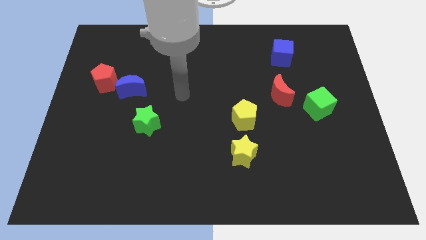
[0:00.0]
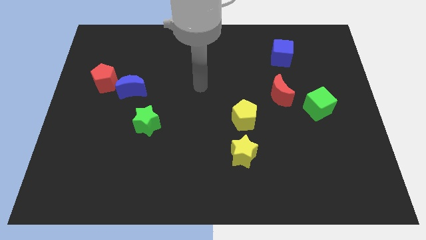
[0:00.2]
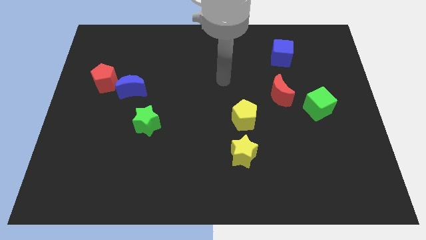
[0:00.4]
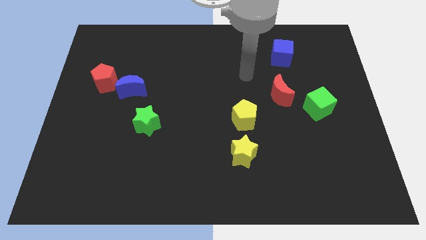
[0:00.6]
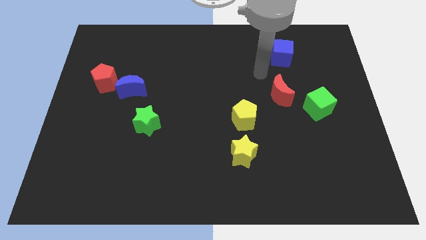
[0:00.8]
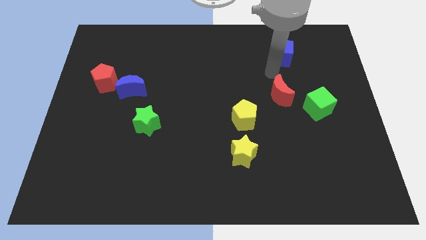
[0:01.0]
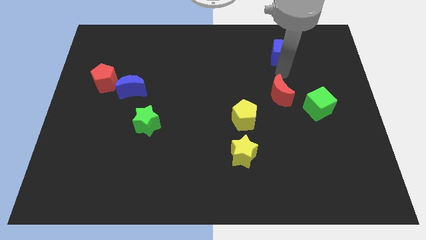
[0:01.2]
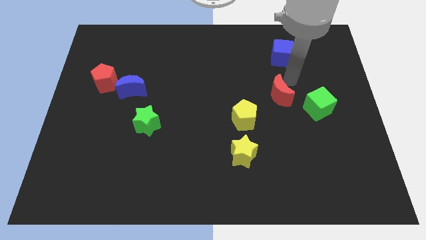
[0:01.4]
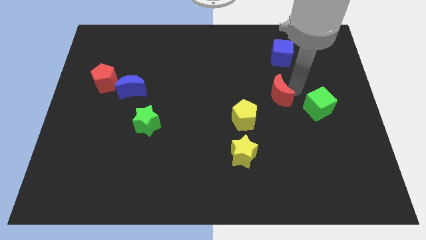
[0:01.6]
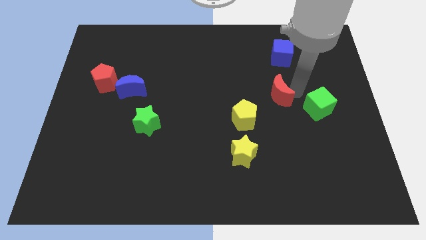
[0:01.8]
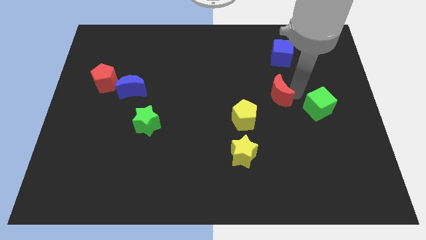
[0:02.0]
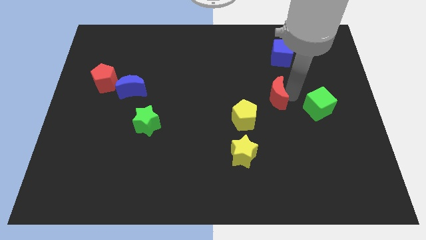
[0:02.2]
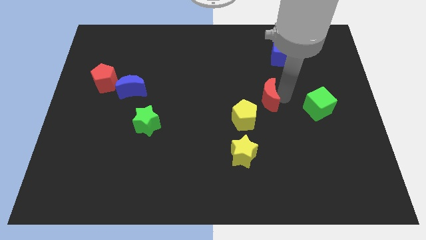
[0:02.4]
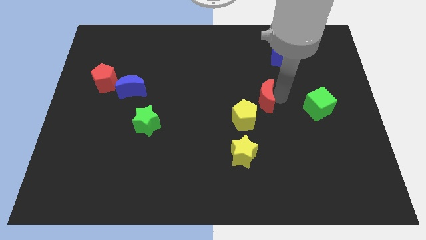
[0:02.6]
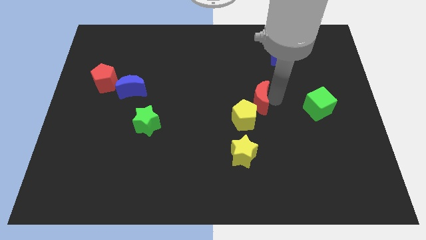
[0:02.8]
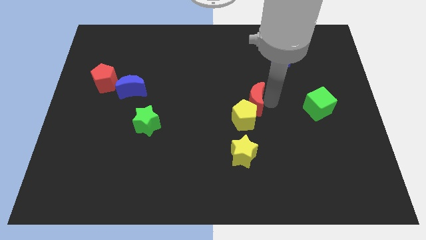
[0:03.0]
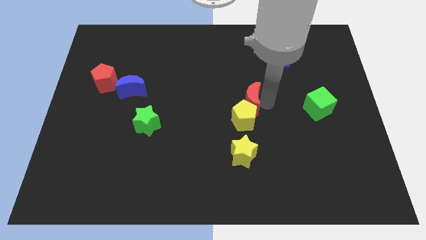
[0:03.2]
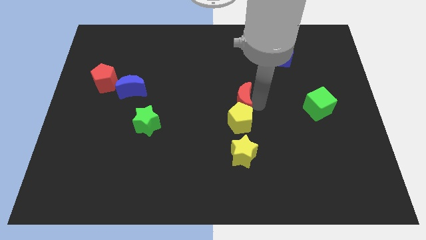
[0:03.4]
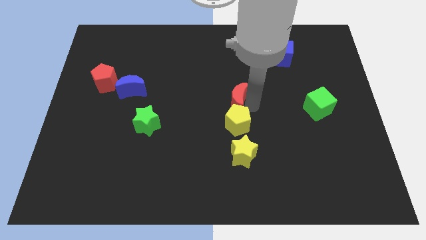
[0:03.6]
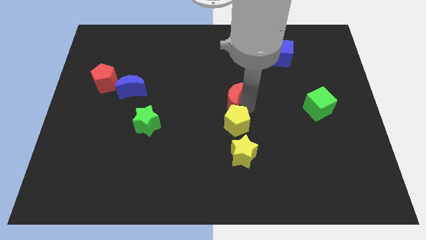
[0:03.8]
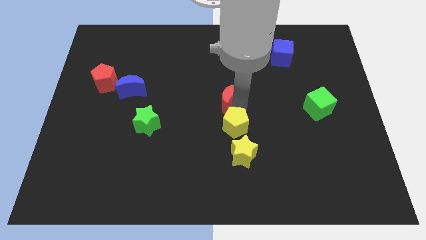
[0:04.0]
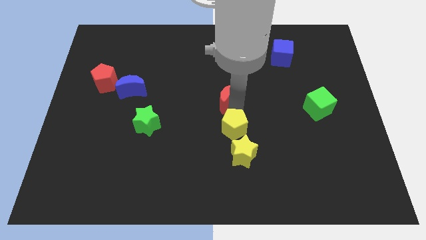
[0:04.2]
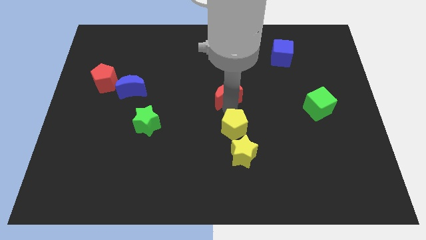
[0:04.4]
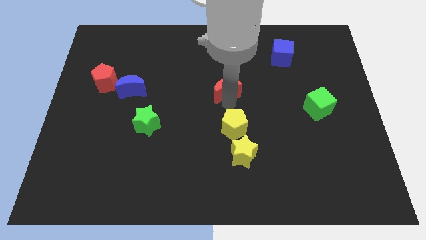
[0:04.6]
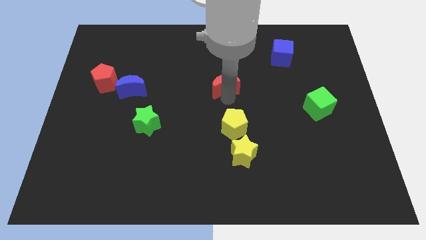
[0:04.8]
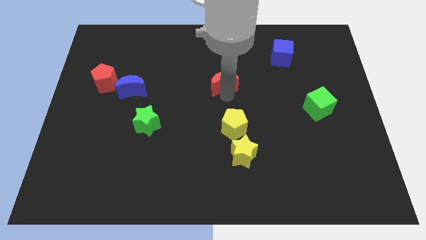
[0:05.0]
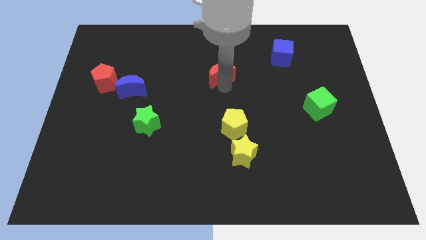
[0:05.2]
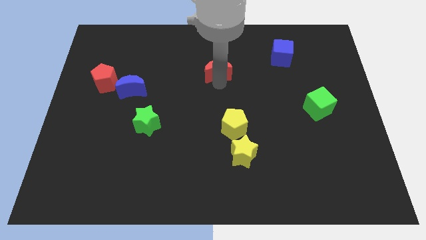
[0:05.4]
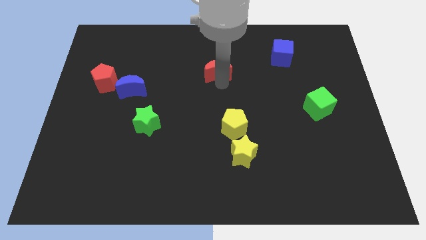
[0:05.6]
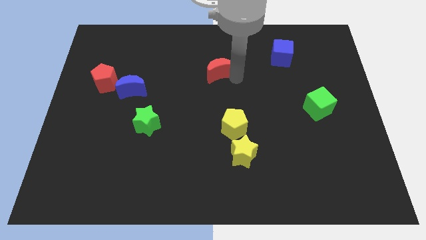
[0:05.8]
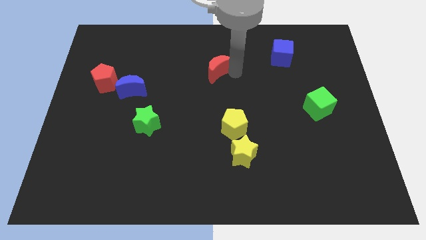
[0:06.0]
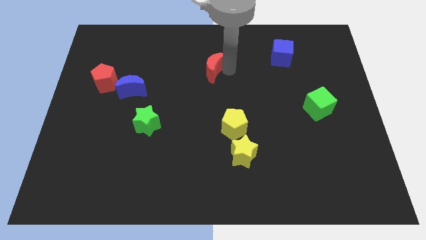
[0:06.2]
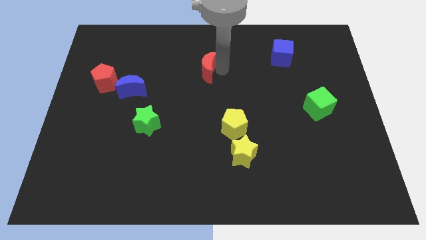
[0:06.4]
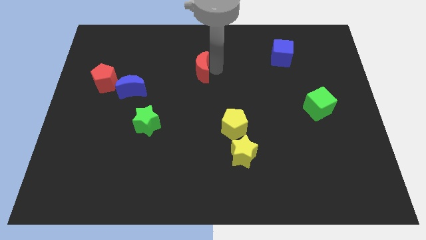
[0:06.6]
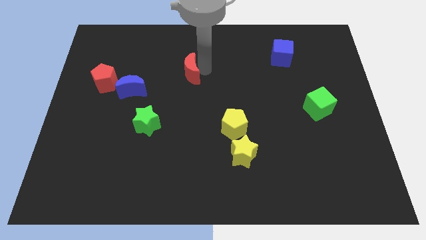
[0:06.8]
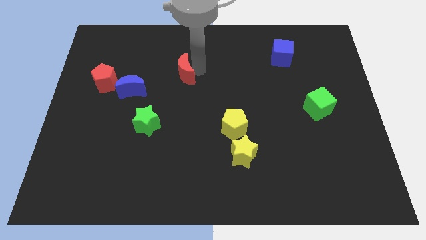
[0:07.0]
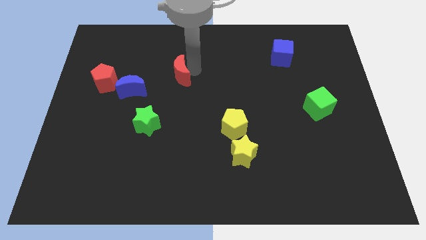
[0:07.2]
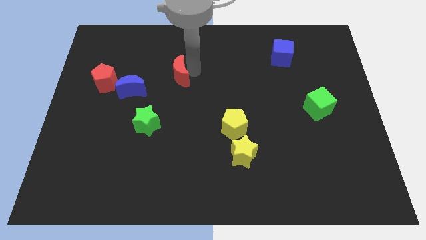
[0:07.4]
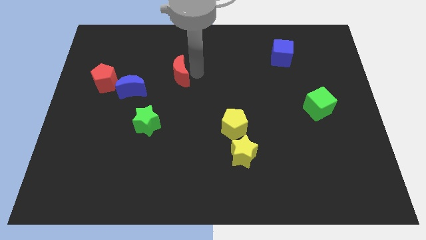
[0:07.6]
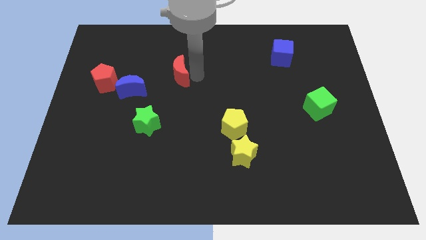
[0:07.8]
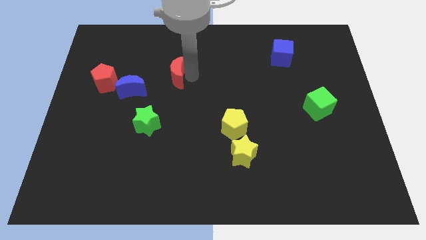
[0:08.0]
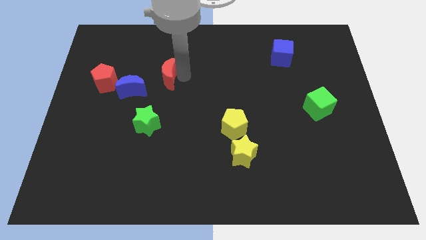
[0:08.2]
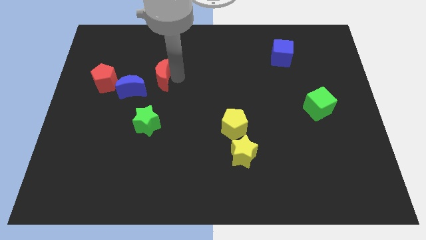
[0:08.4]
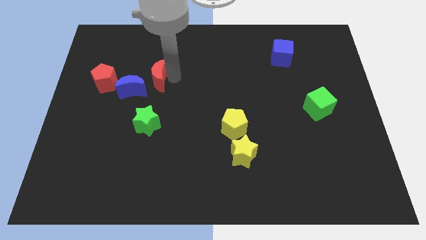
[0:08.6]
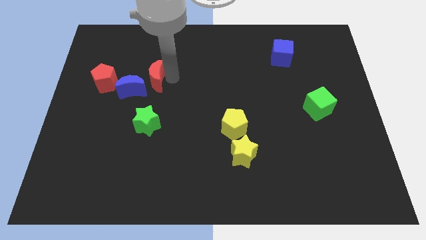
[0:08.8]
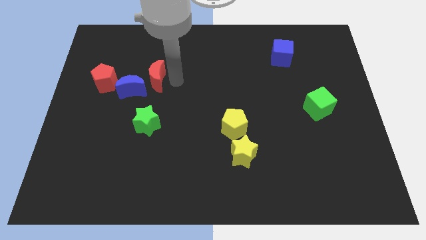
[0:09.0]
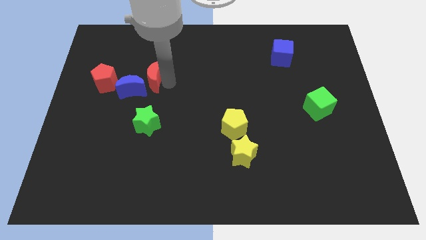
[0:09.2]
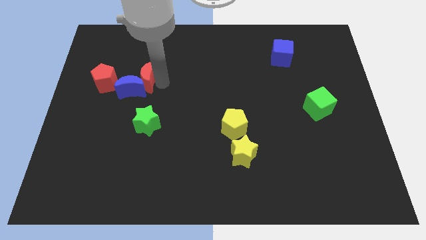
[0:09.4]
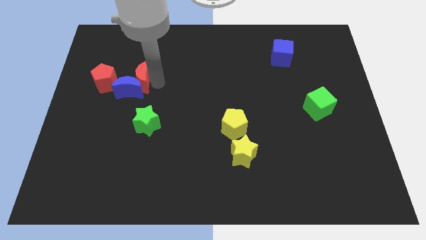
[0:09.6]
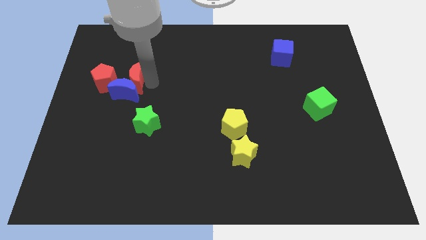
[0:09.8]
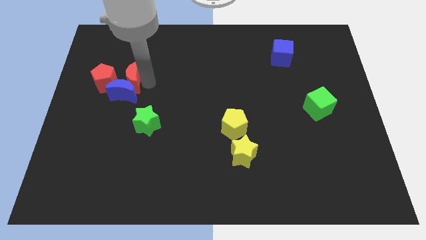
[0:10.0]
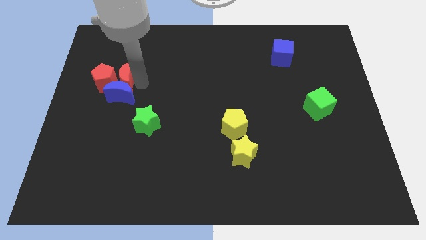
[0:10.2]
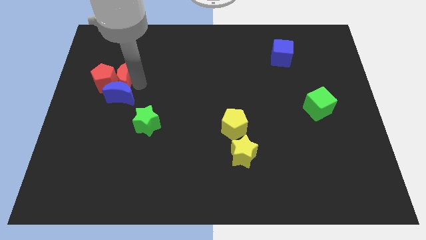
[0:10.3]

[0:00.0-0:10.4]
push the red moon close to the red pentagon

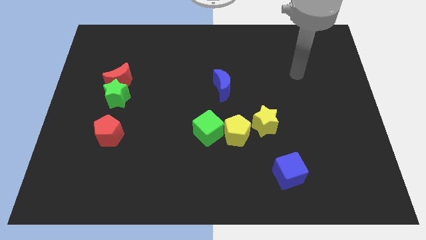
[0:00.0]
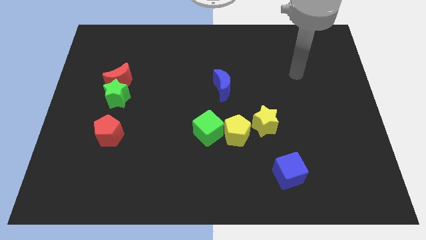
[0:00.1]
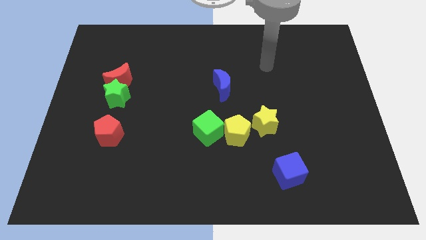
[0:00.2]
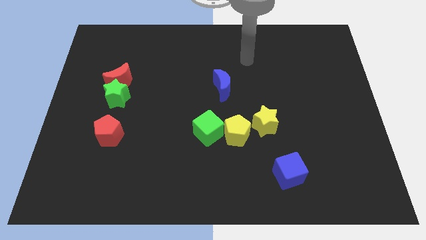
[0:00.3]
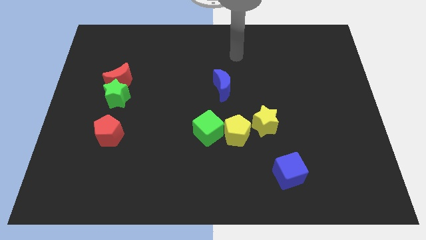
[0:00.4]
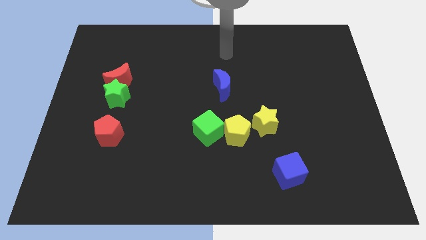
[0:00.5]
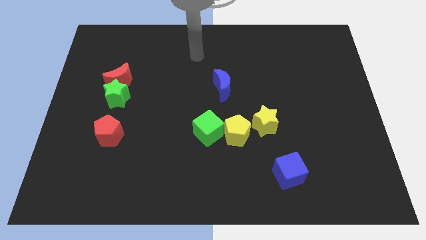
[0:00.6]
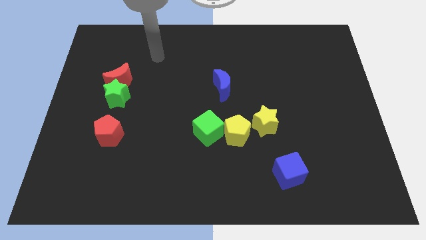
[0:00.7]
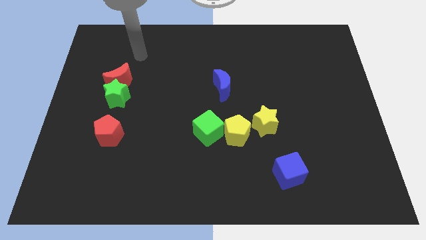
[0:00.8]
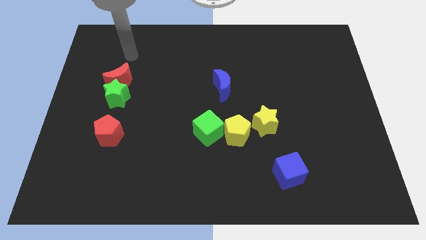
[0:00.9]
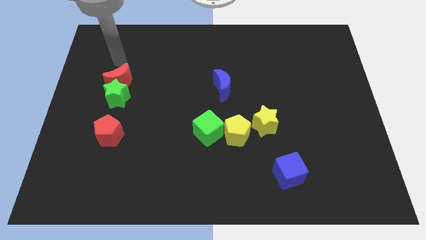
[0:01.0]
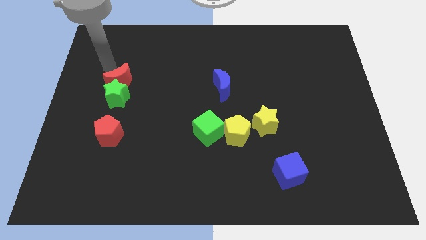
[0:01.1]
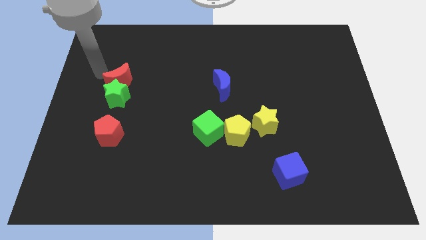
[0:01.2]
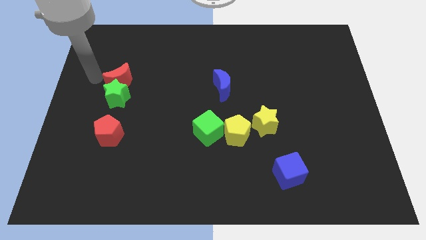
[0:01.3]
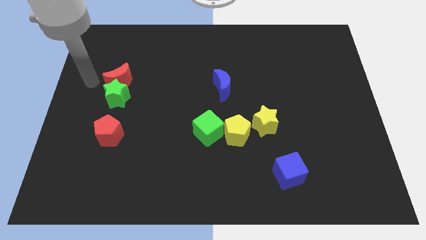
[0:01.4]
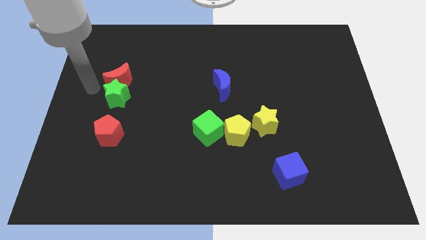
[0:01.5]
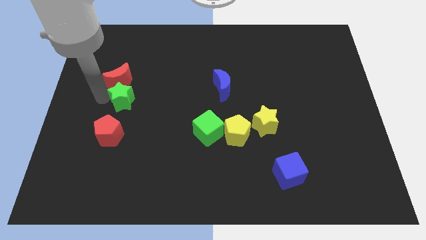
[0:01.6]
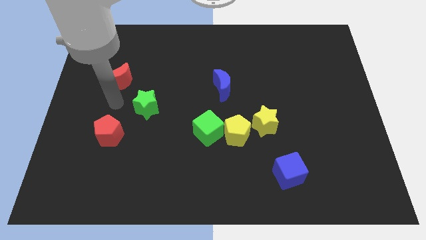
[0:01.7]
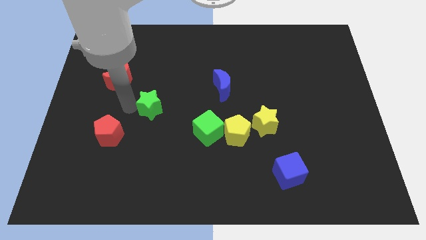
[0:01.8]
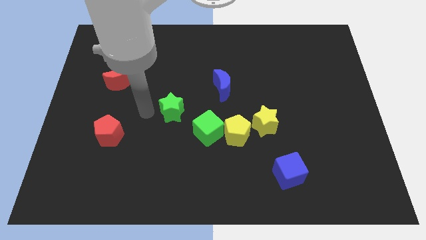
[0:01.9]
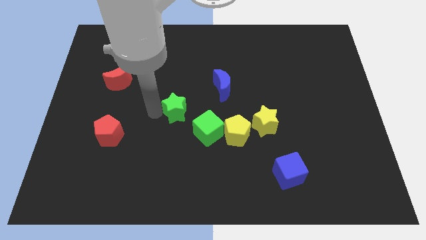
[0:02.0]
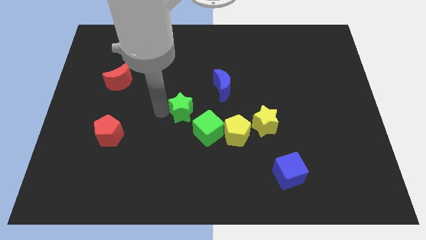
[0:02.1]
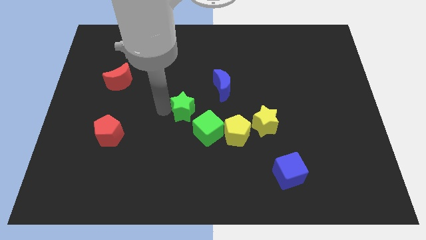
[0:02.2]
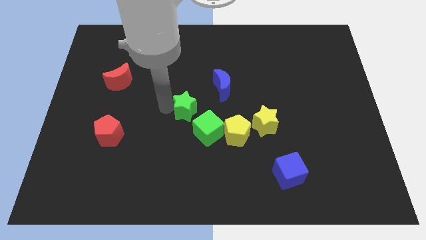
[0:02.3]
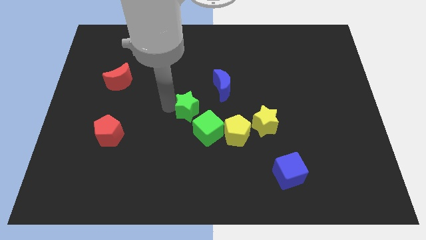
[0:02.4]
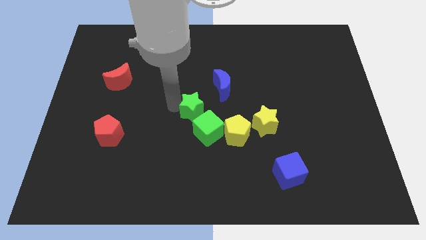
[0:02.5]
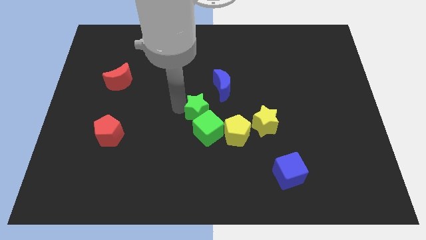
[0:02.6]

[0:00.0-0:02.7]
put the green star to the green cube

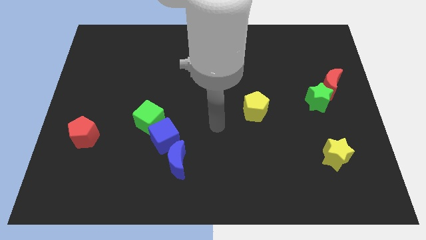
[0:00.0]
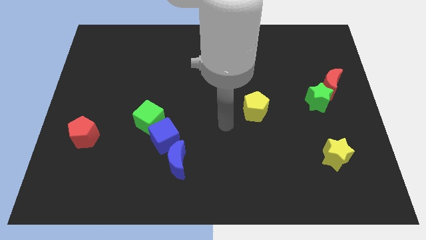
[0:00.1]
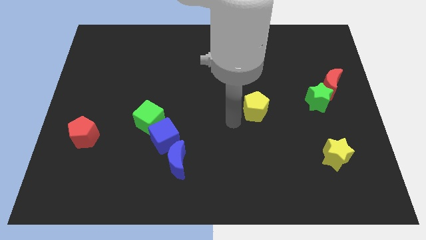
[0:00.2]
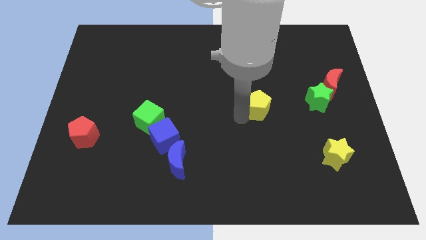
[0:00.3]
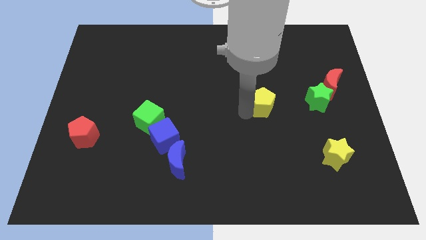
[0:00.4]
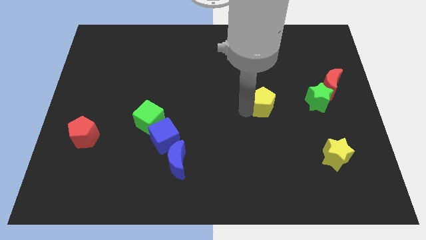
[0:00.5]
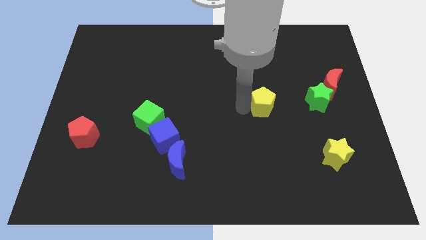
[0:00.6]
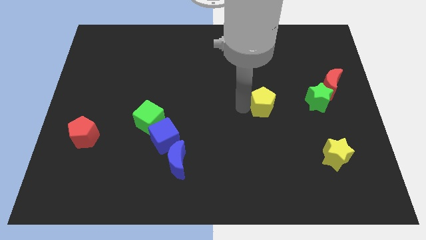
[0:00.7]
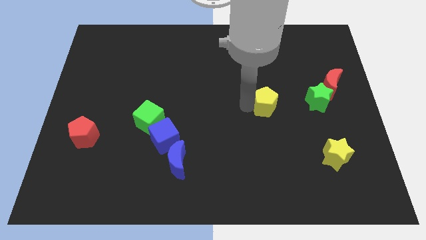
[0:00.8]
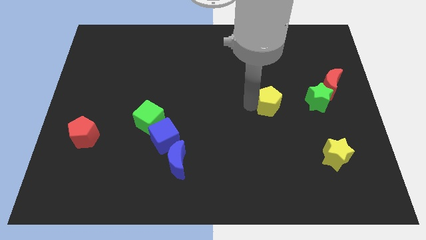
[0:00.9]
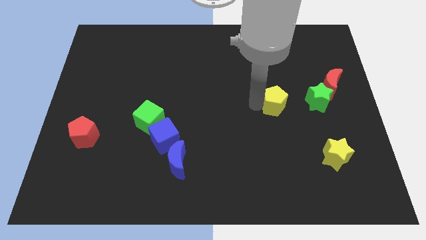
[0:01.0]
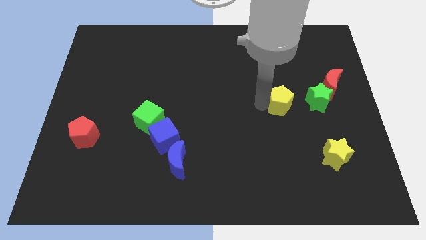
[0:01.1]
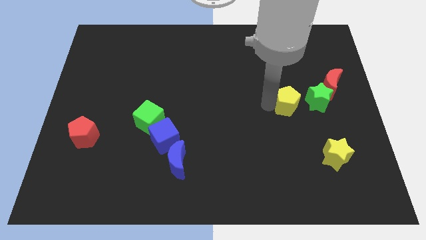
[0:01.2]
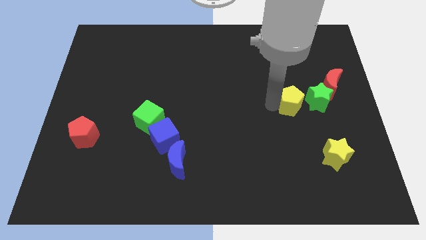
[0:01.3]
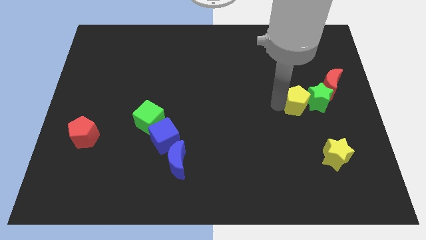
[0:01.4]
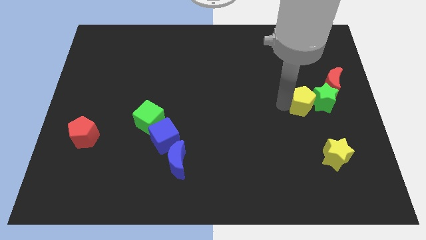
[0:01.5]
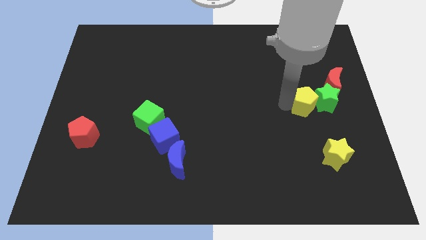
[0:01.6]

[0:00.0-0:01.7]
put the yellow pentagon to the green star
